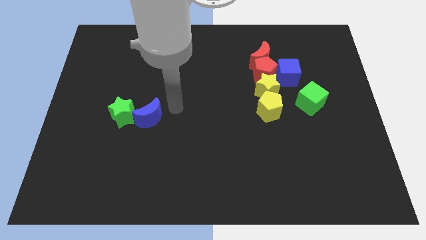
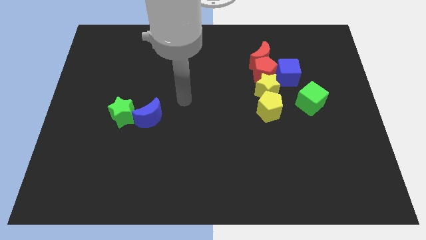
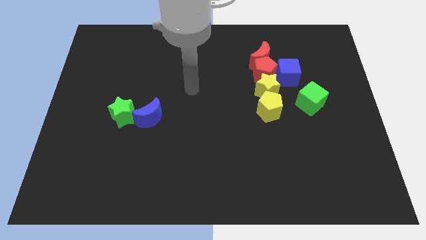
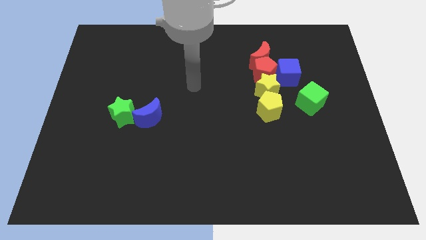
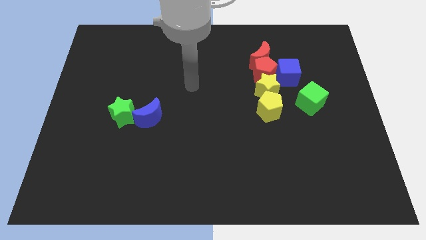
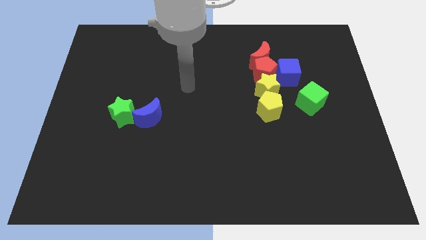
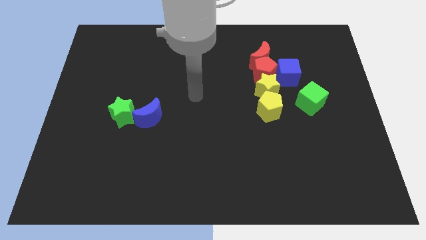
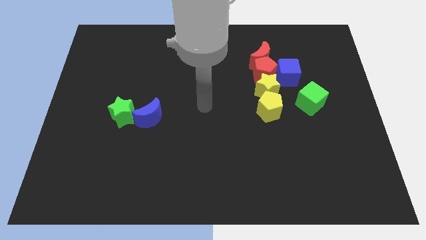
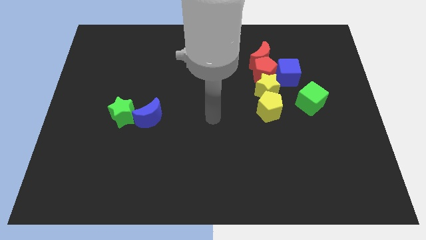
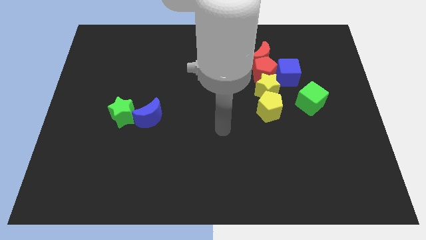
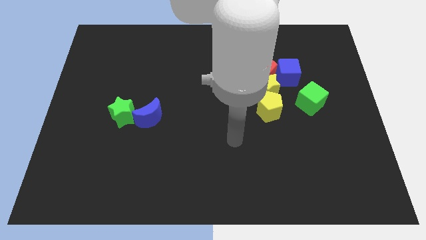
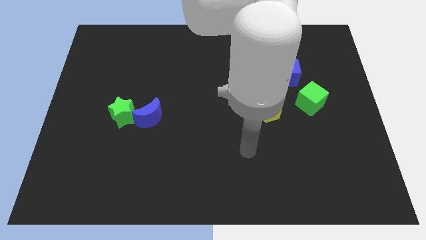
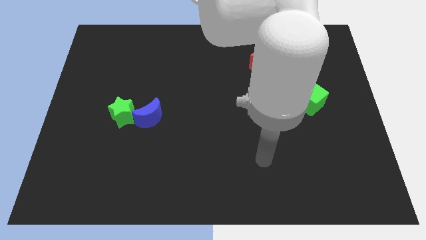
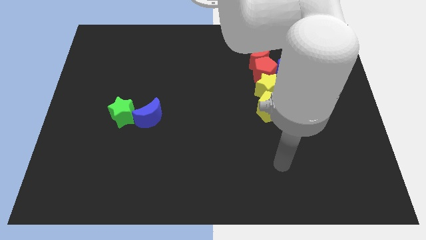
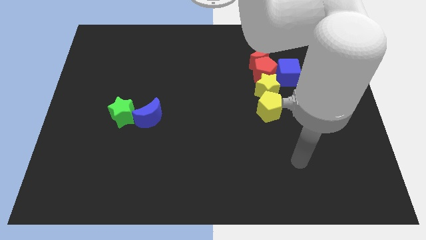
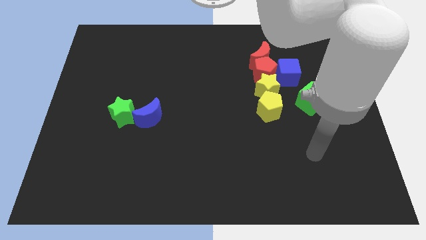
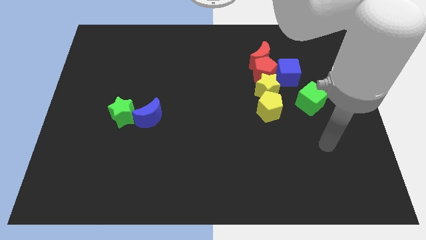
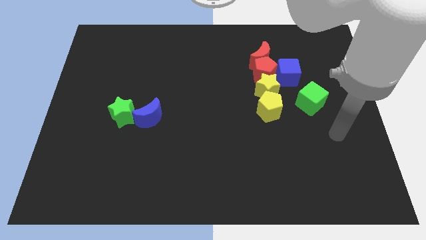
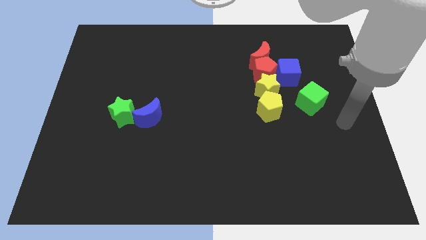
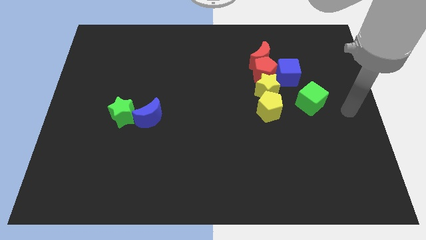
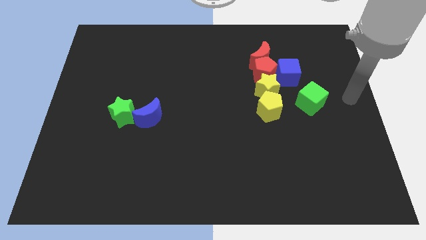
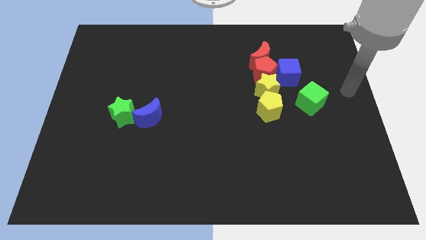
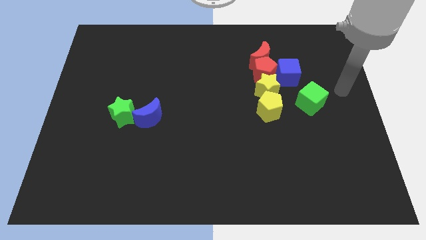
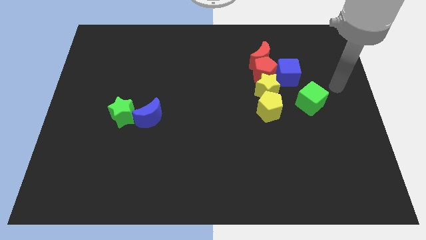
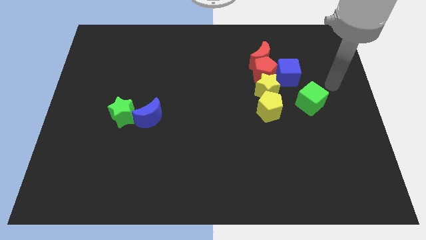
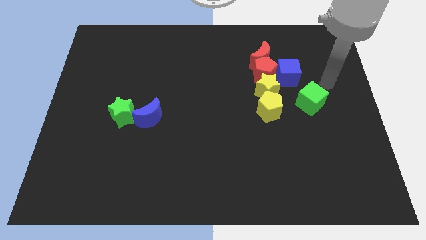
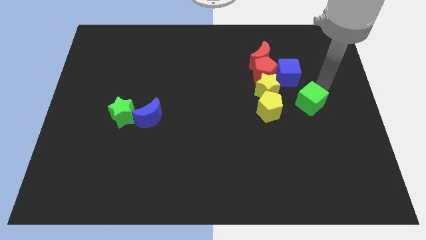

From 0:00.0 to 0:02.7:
move your arm to the green cube

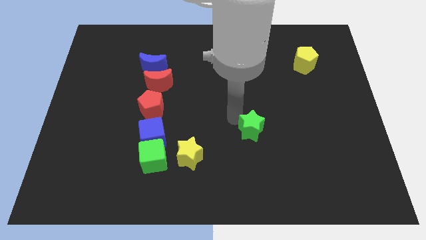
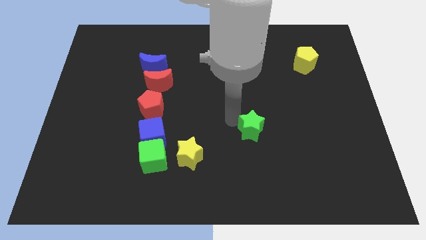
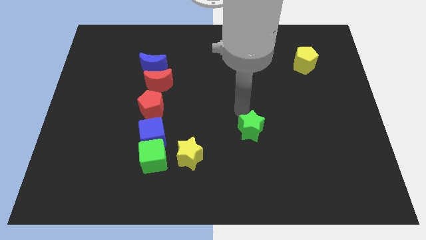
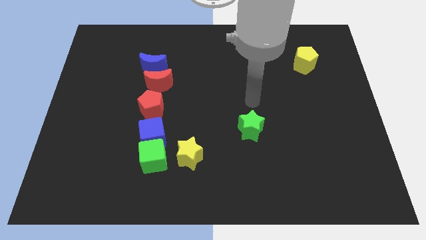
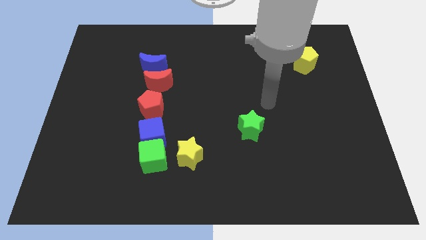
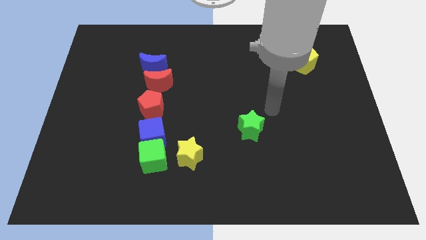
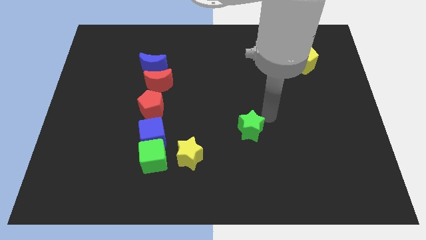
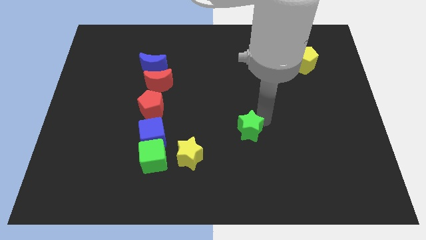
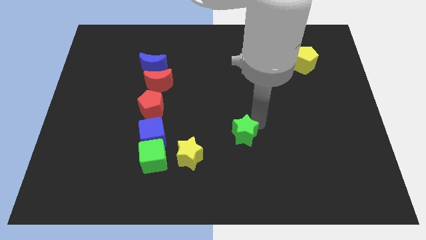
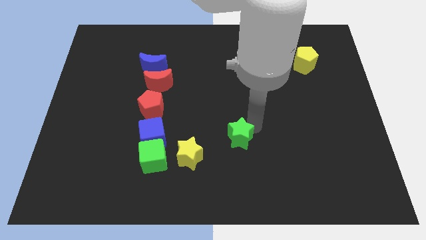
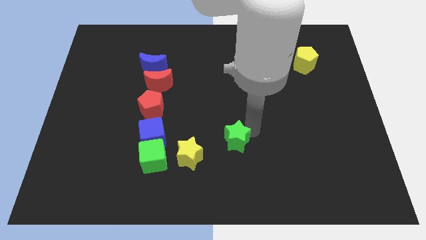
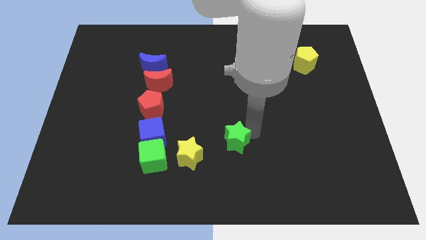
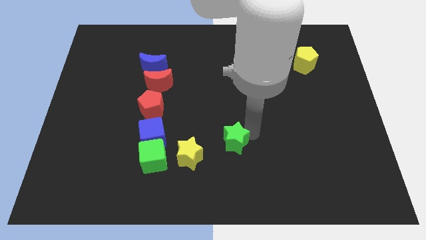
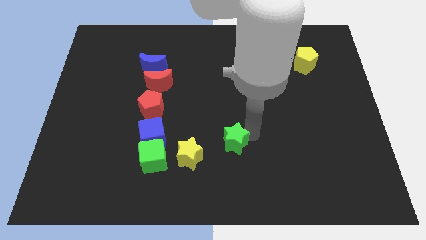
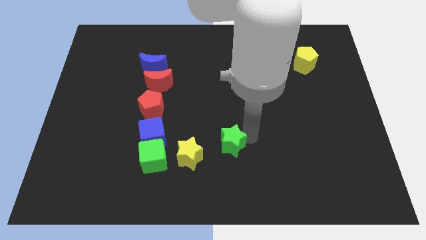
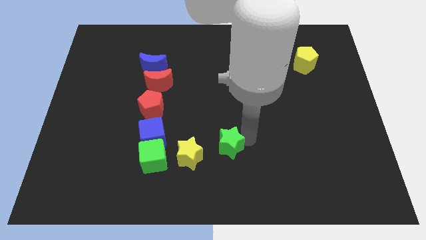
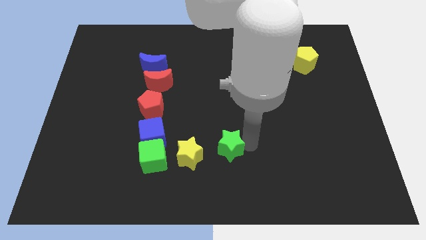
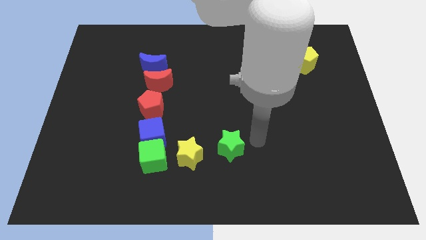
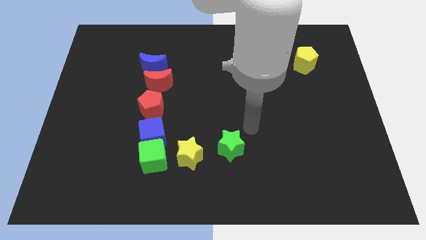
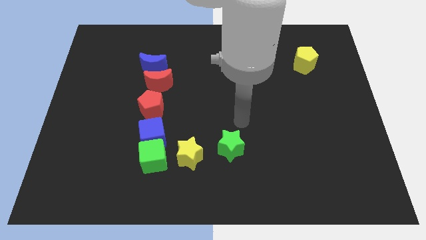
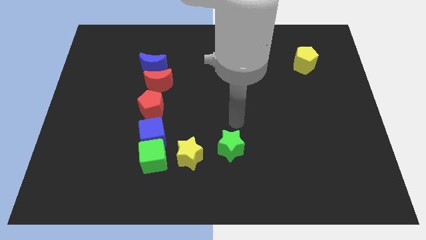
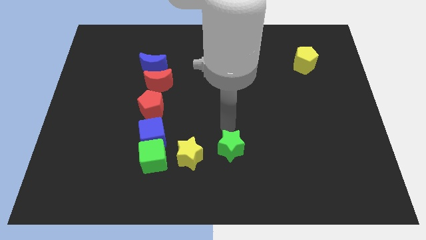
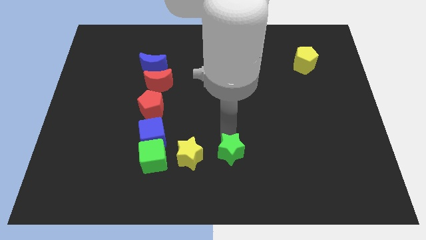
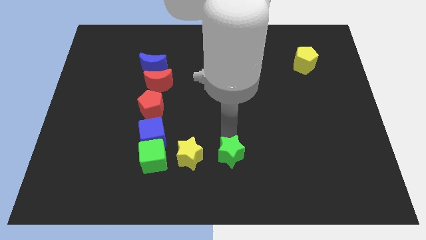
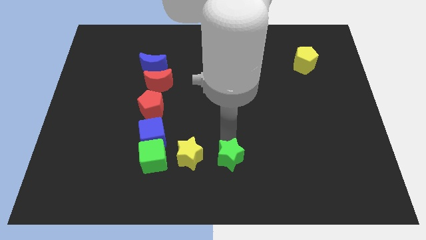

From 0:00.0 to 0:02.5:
push the green star to the right of the yellow star

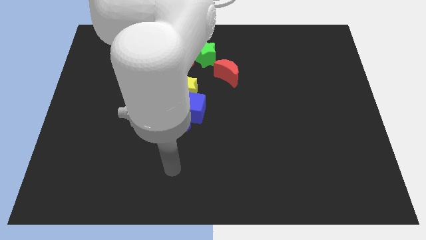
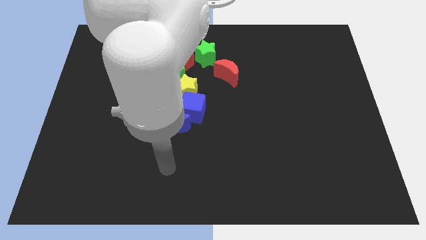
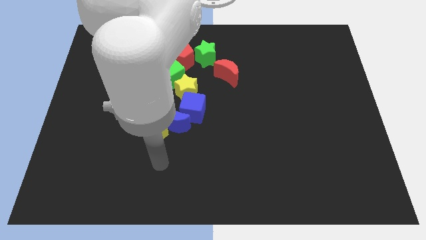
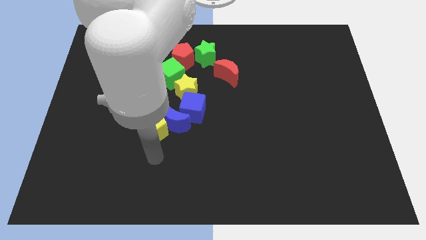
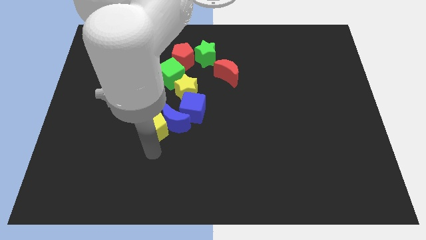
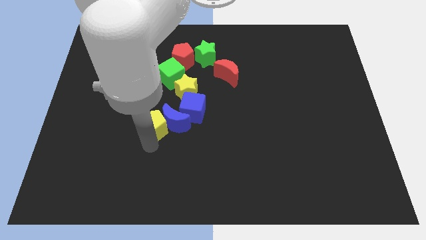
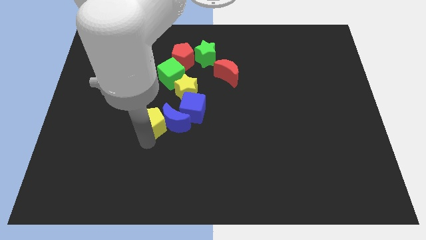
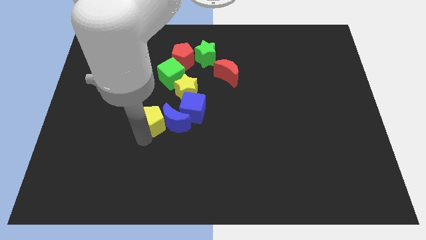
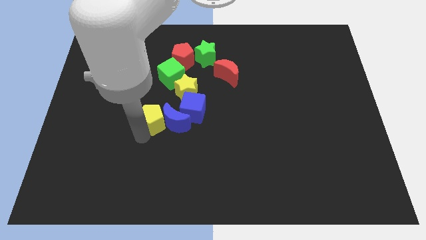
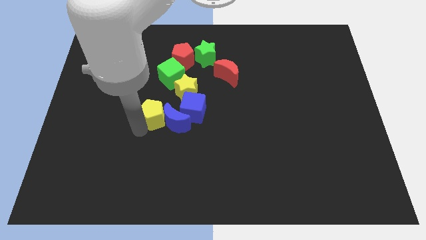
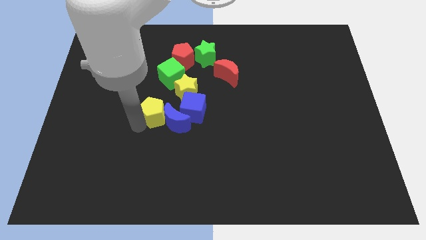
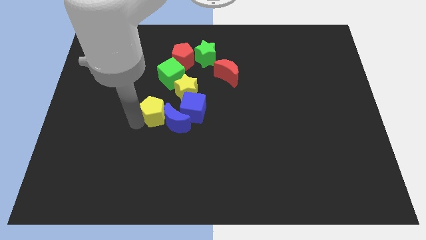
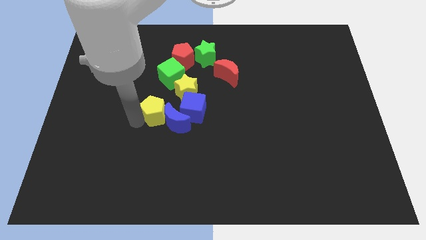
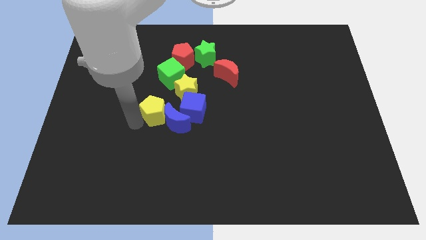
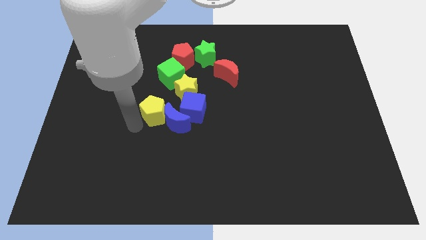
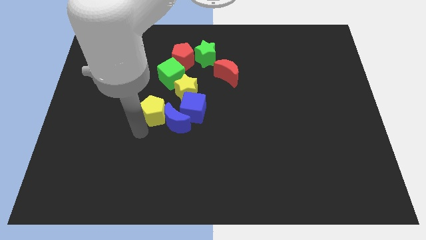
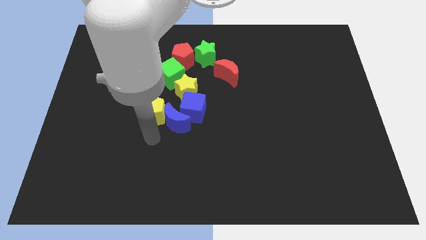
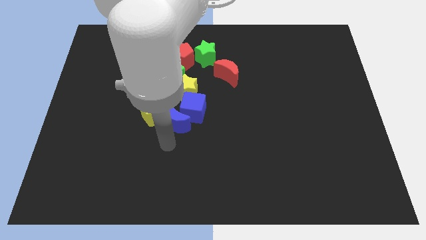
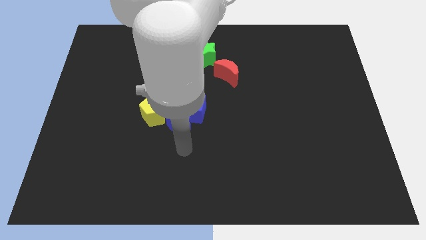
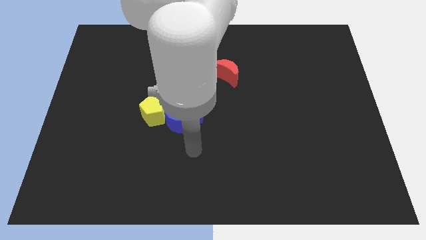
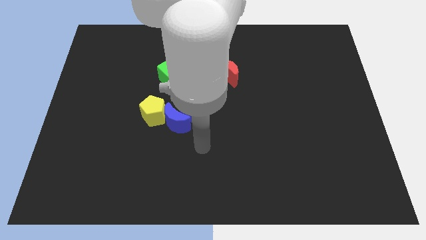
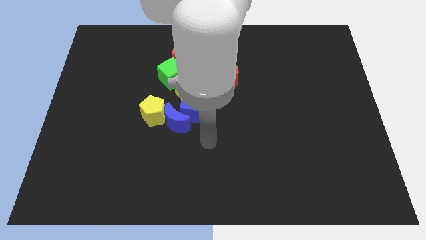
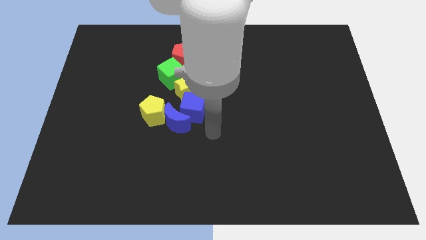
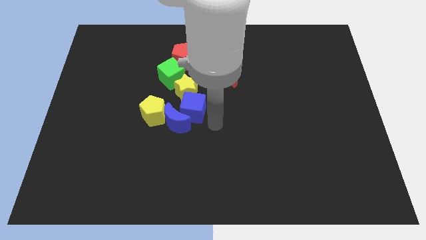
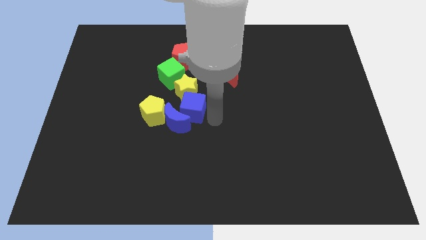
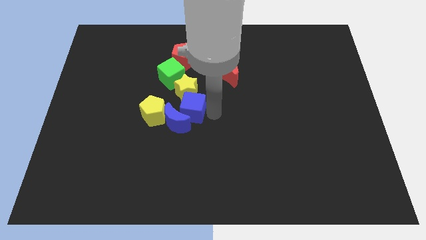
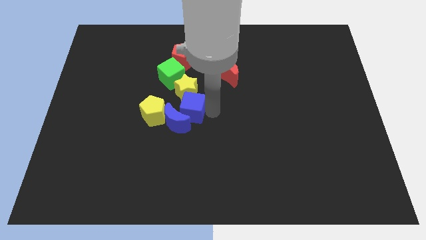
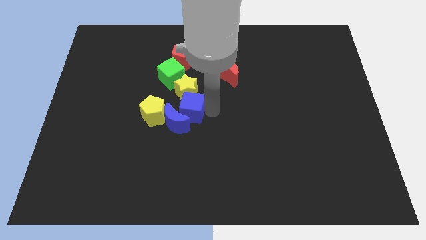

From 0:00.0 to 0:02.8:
slightly move the yellow pentagon towards up

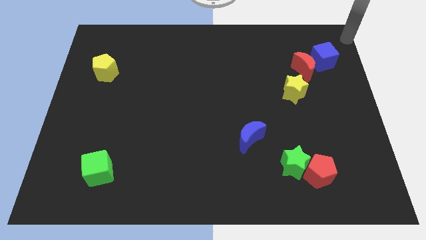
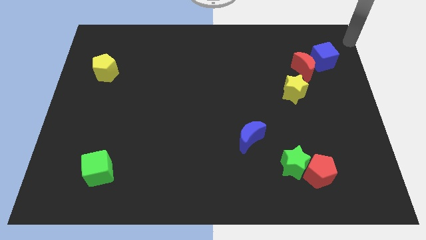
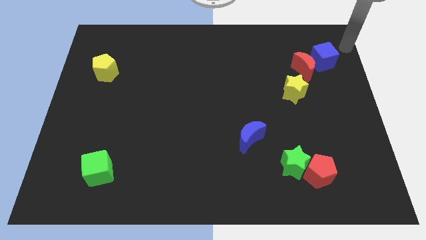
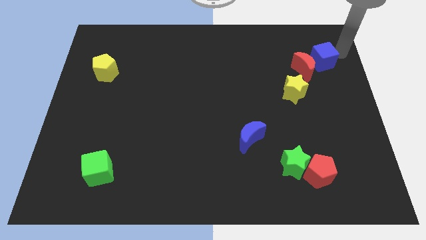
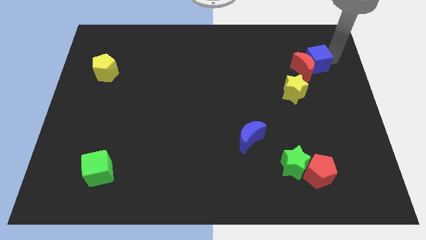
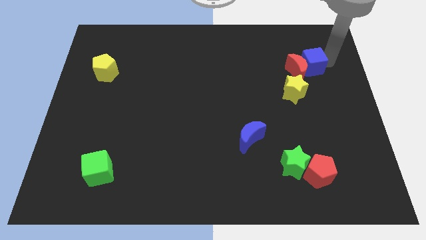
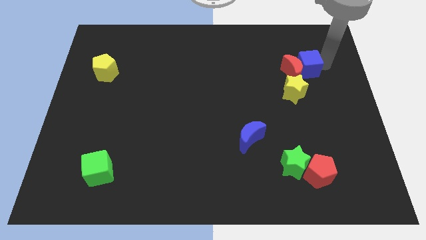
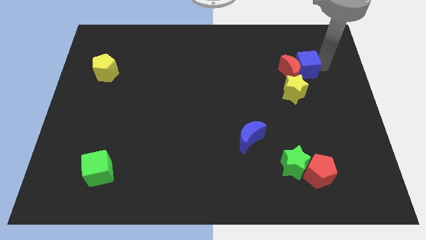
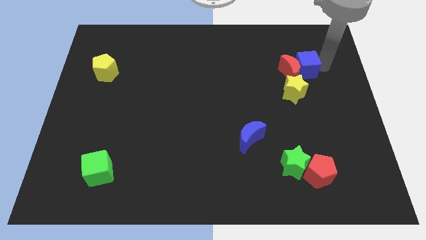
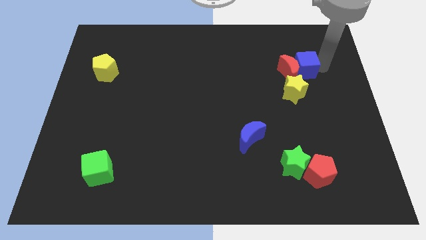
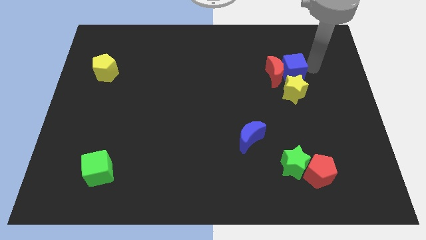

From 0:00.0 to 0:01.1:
move blue cube along with red moon to the left
